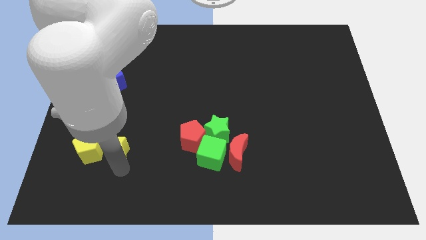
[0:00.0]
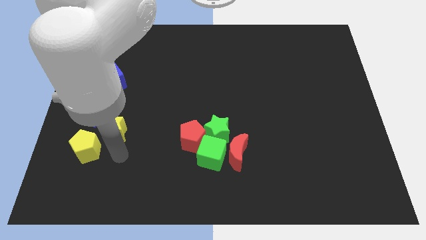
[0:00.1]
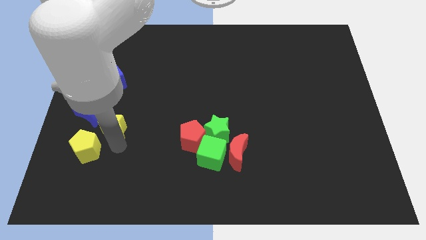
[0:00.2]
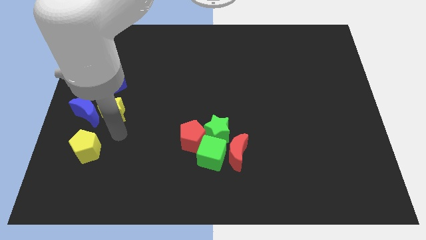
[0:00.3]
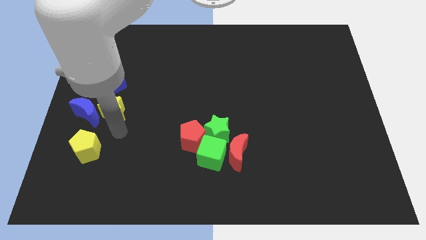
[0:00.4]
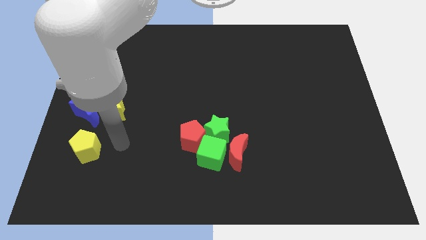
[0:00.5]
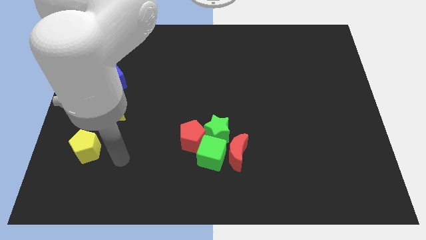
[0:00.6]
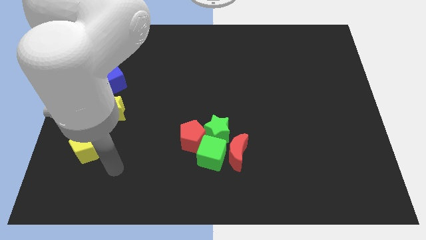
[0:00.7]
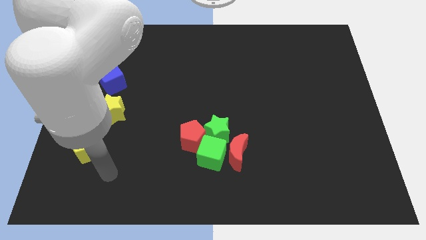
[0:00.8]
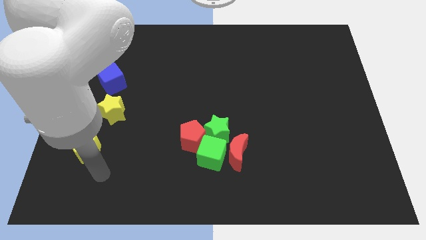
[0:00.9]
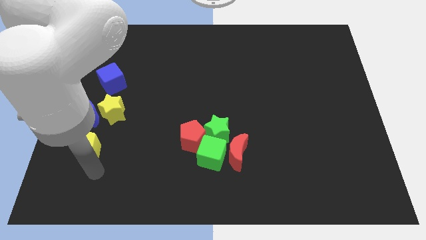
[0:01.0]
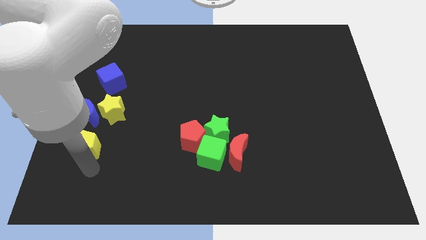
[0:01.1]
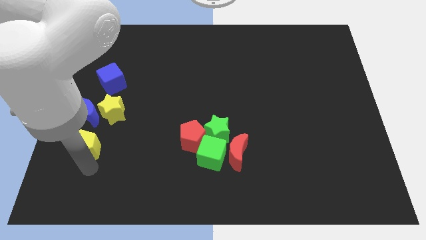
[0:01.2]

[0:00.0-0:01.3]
move the yellow star to the bottom of the blue cube

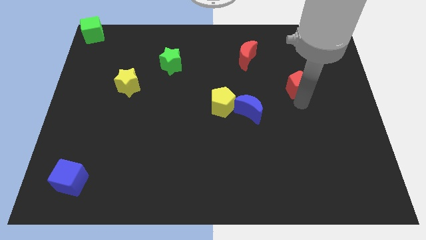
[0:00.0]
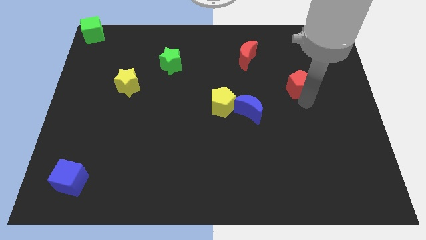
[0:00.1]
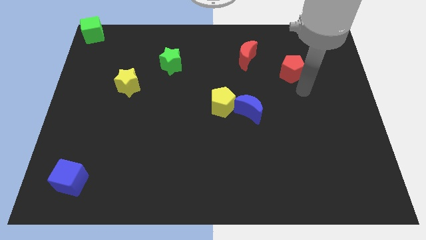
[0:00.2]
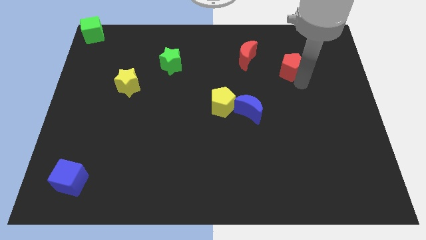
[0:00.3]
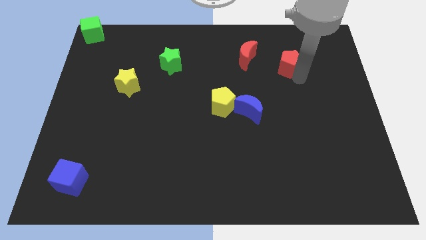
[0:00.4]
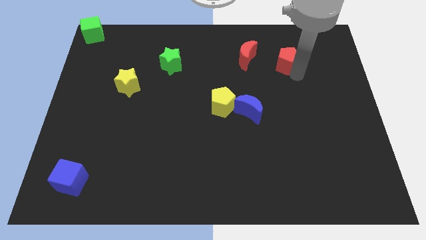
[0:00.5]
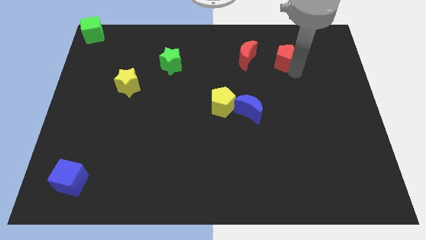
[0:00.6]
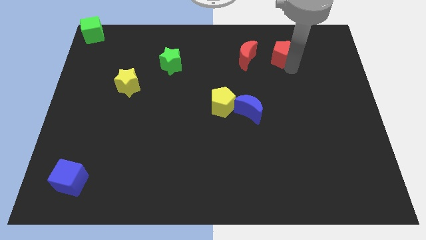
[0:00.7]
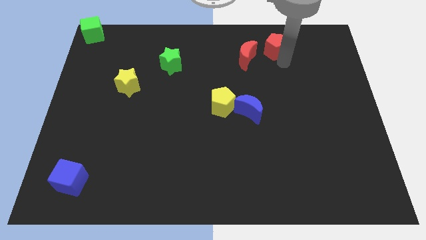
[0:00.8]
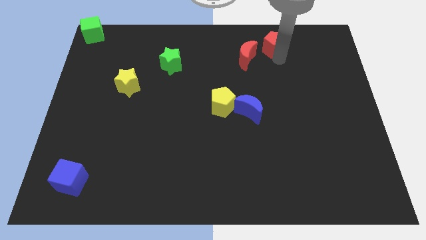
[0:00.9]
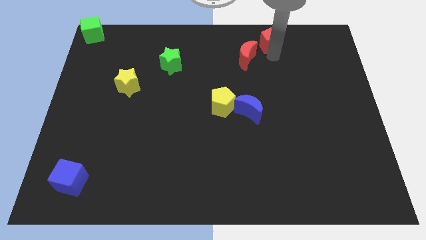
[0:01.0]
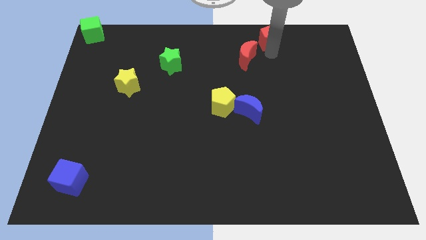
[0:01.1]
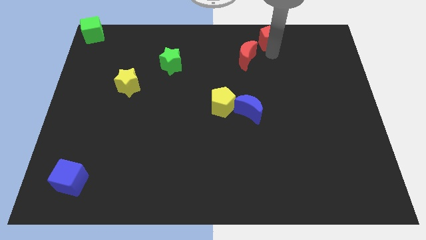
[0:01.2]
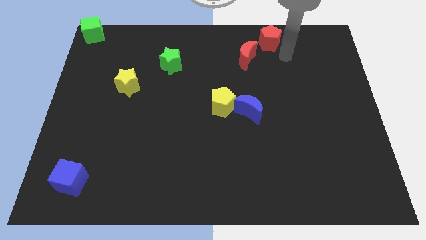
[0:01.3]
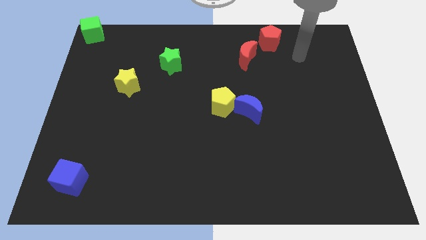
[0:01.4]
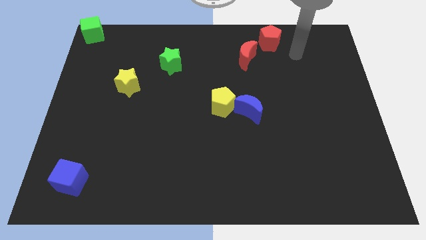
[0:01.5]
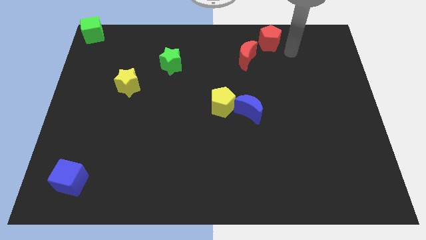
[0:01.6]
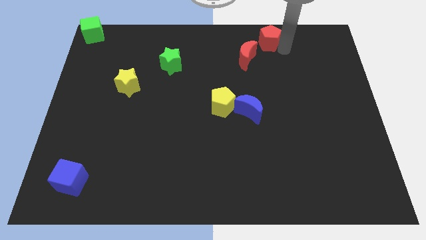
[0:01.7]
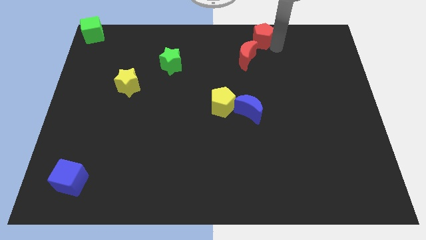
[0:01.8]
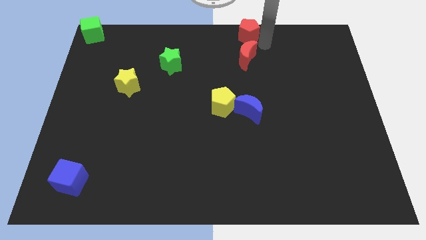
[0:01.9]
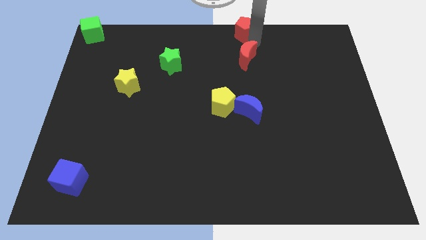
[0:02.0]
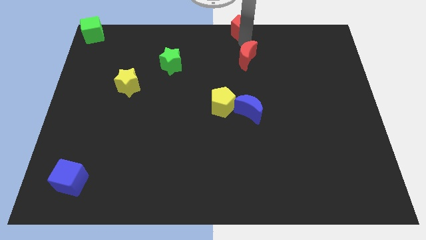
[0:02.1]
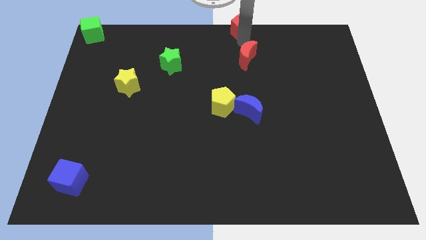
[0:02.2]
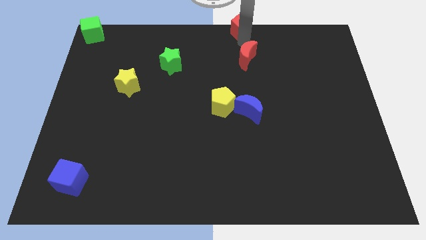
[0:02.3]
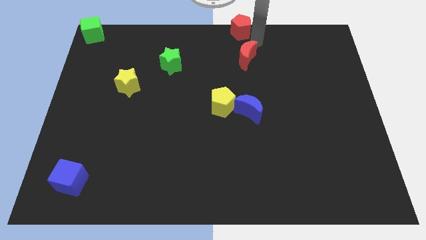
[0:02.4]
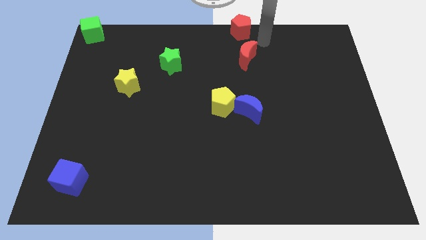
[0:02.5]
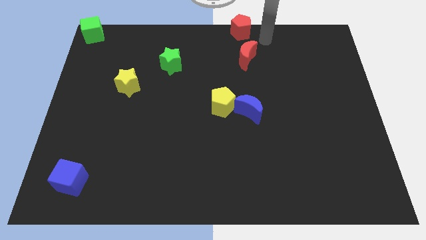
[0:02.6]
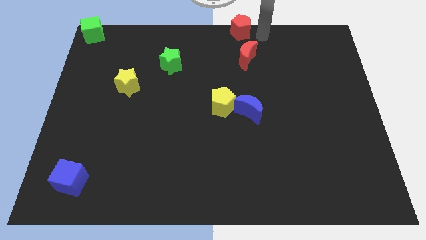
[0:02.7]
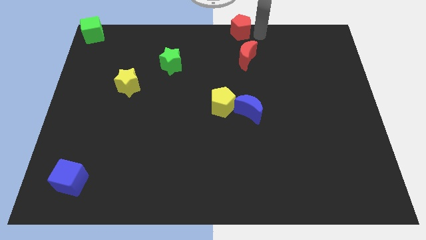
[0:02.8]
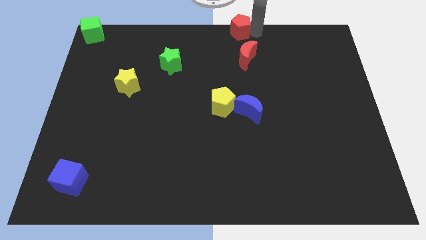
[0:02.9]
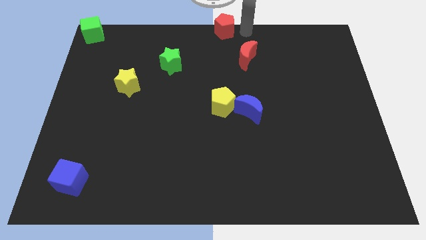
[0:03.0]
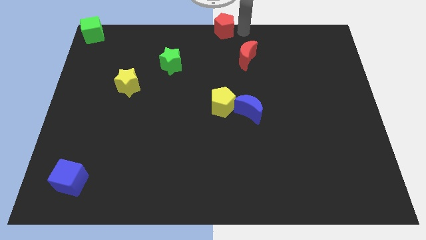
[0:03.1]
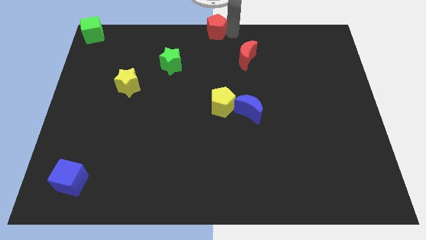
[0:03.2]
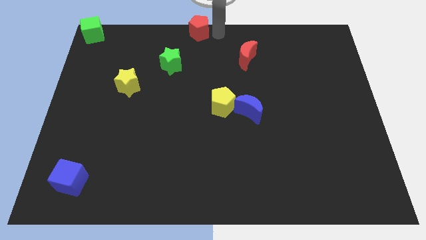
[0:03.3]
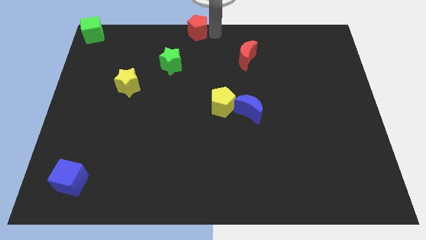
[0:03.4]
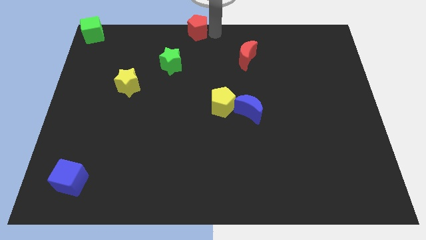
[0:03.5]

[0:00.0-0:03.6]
push the red pentagon to the top right of the green star

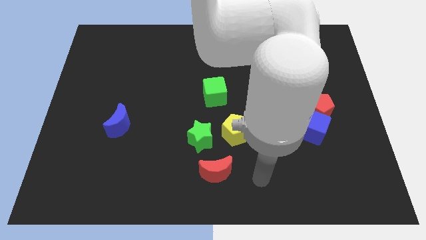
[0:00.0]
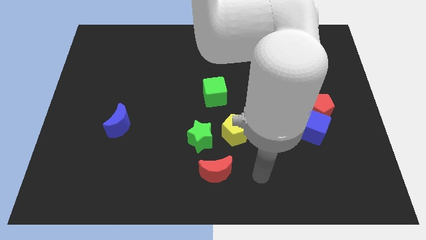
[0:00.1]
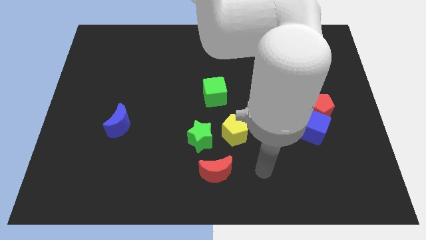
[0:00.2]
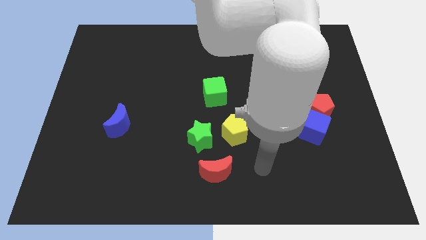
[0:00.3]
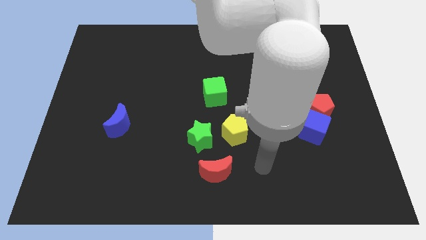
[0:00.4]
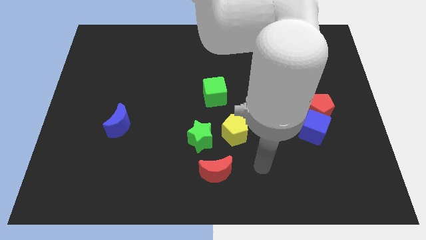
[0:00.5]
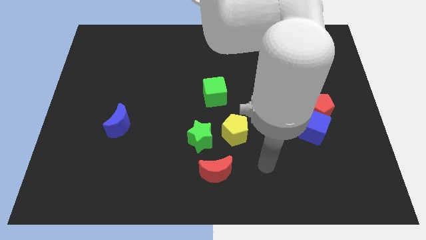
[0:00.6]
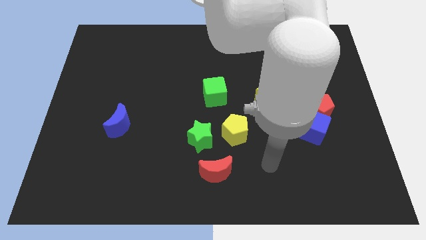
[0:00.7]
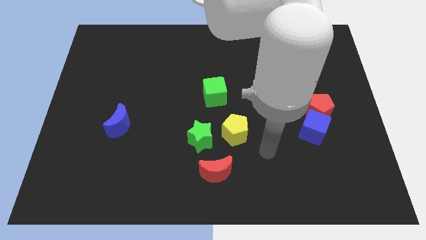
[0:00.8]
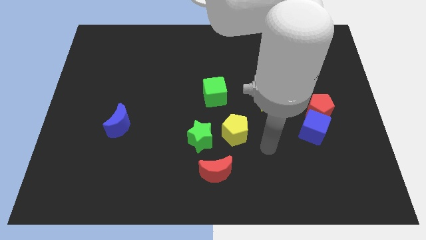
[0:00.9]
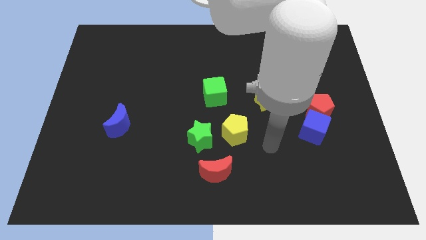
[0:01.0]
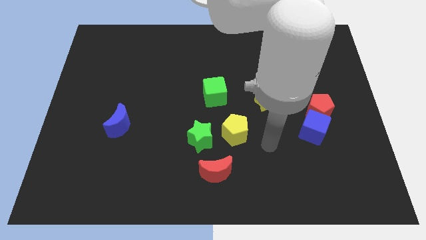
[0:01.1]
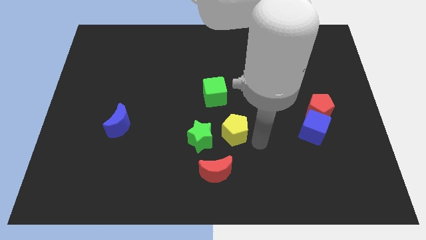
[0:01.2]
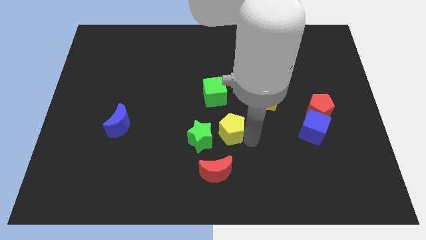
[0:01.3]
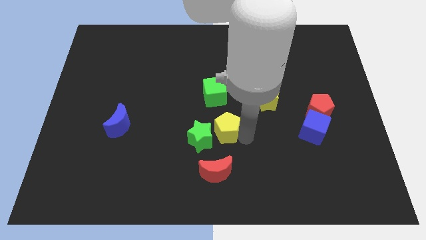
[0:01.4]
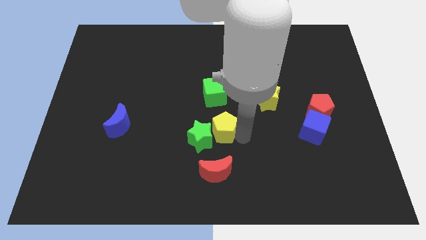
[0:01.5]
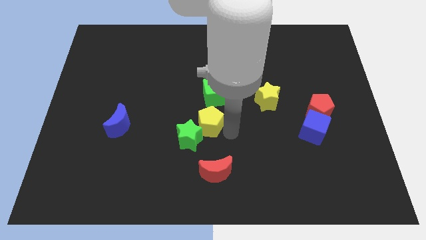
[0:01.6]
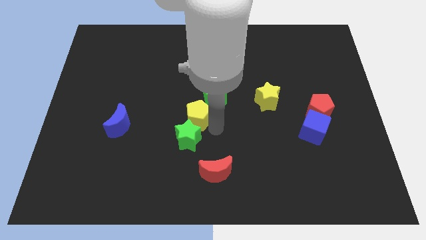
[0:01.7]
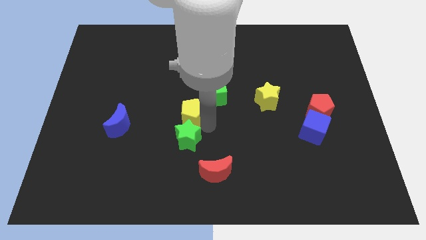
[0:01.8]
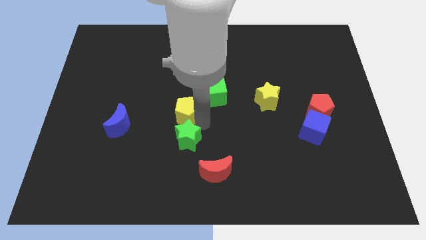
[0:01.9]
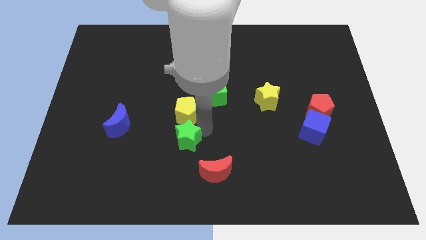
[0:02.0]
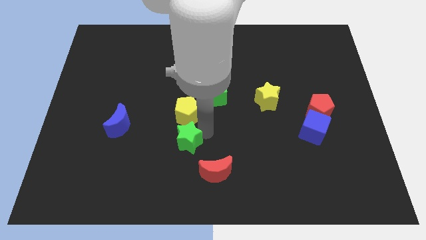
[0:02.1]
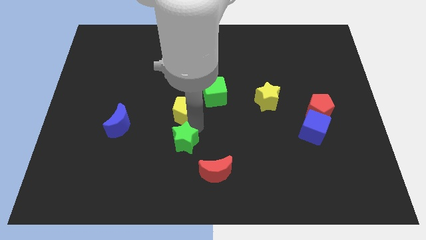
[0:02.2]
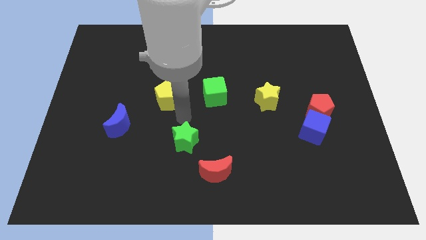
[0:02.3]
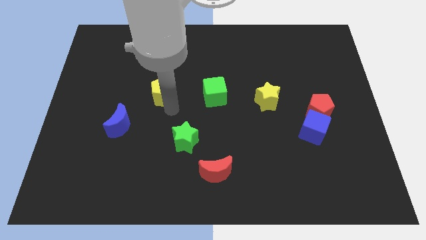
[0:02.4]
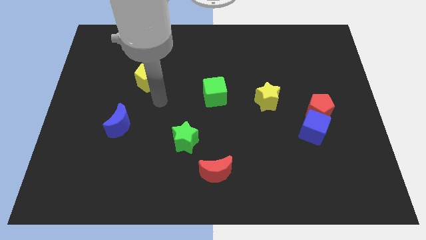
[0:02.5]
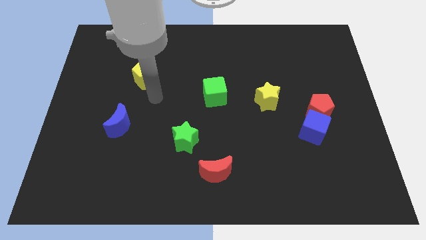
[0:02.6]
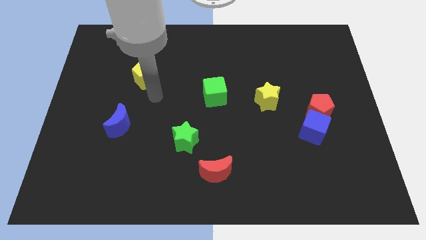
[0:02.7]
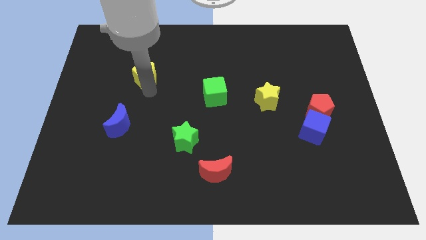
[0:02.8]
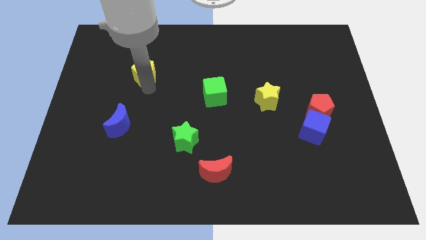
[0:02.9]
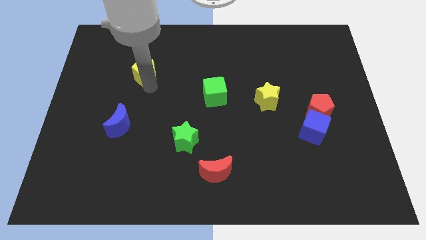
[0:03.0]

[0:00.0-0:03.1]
separate the green star and yellow penatgon

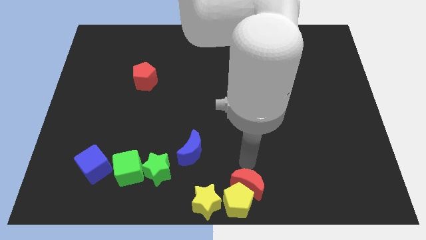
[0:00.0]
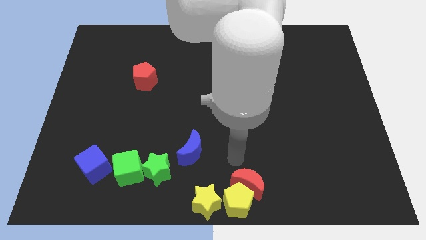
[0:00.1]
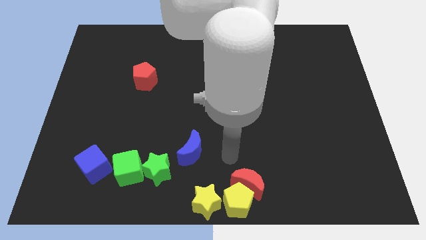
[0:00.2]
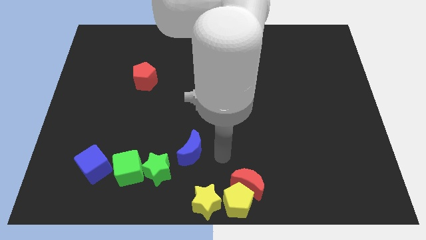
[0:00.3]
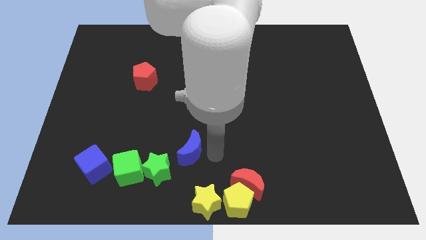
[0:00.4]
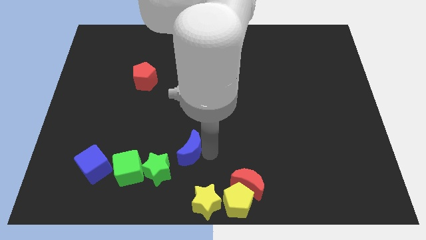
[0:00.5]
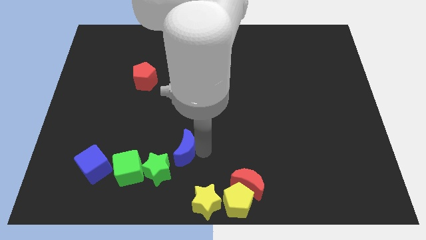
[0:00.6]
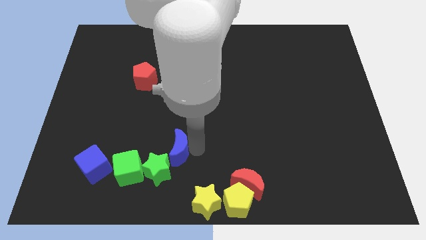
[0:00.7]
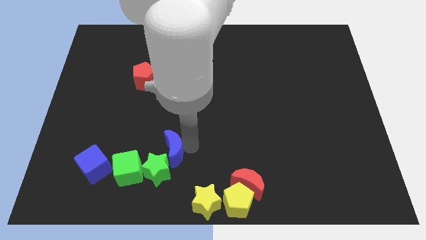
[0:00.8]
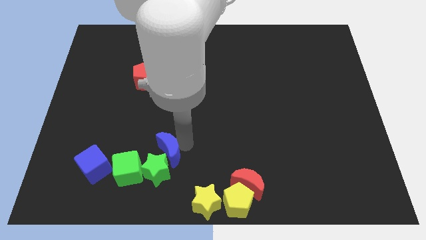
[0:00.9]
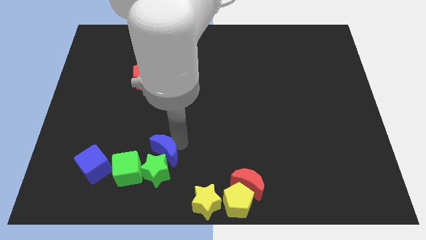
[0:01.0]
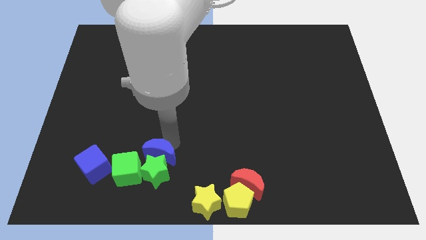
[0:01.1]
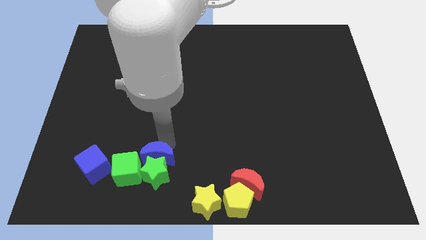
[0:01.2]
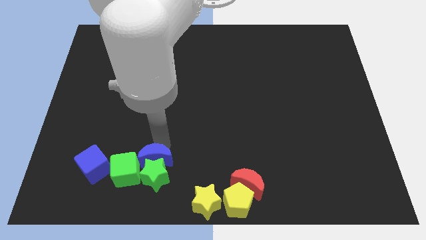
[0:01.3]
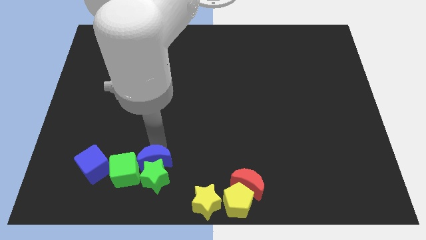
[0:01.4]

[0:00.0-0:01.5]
slide the blue moon into the top side of the green star
